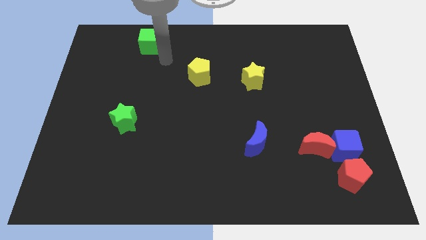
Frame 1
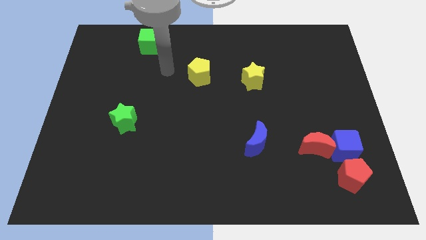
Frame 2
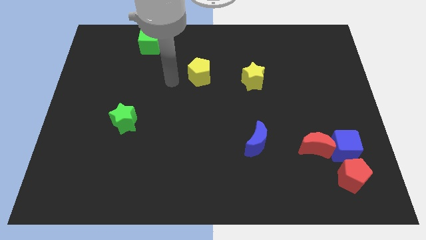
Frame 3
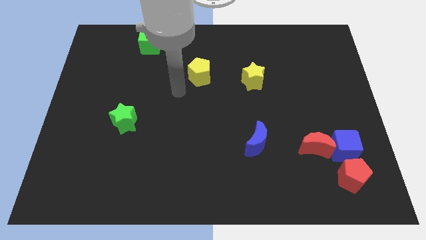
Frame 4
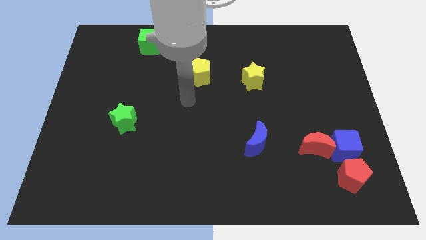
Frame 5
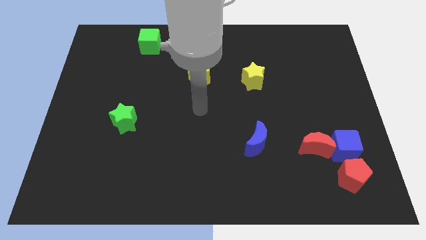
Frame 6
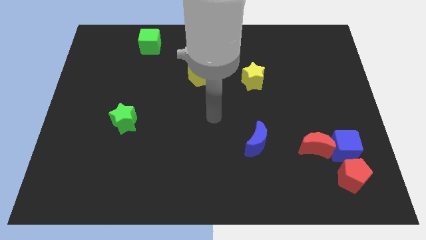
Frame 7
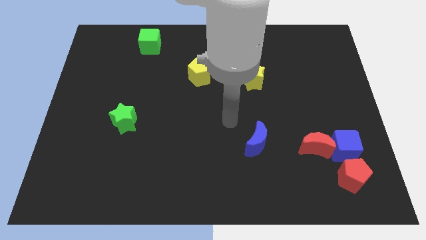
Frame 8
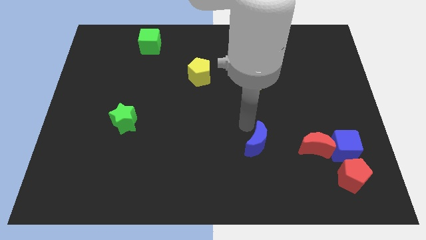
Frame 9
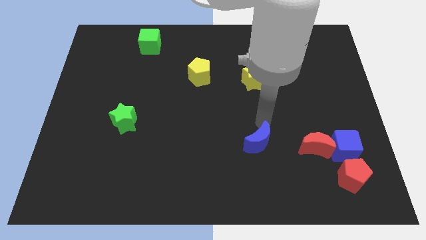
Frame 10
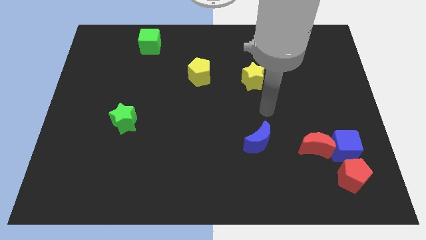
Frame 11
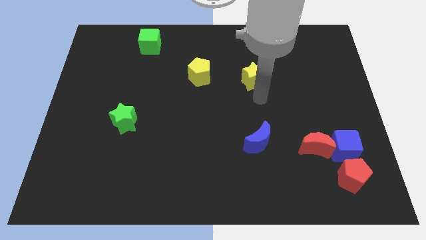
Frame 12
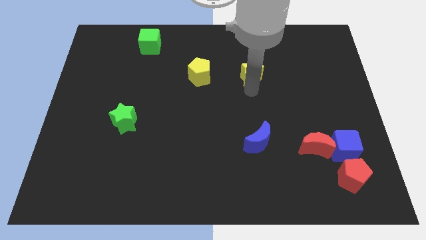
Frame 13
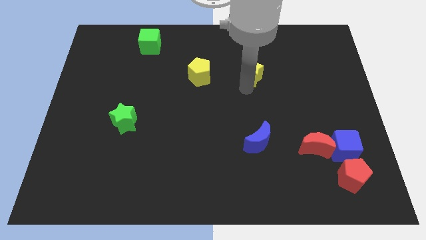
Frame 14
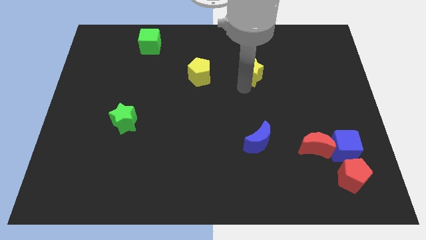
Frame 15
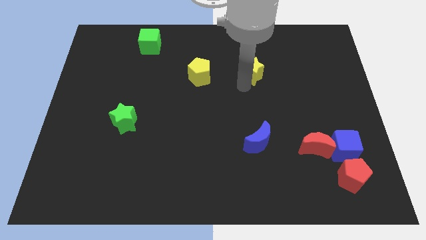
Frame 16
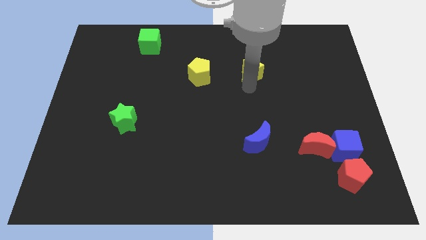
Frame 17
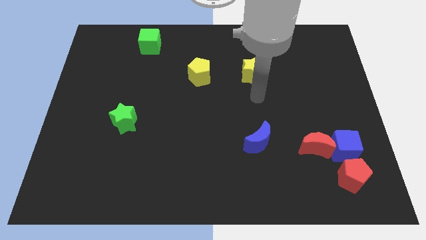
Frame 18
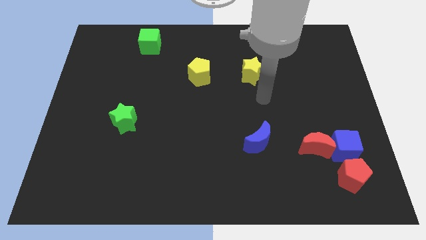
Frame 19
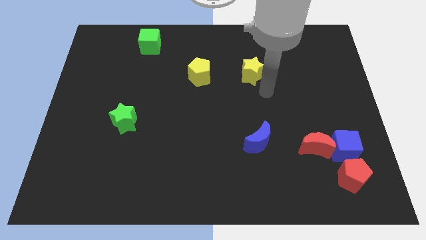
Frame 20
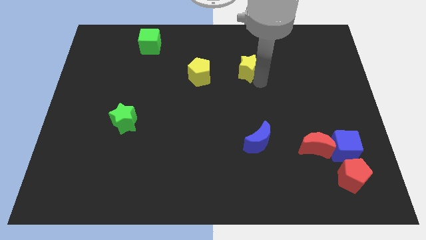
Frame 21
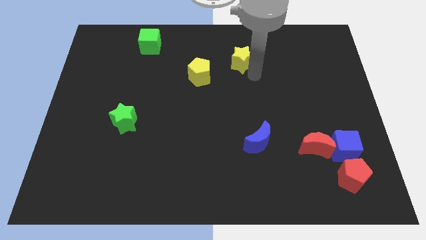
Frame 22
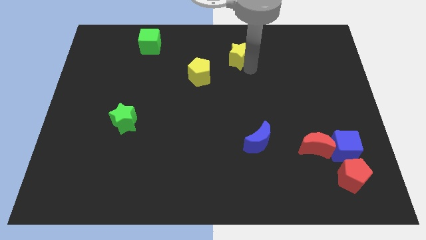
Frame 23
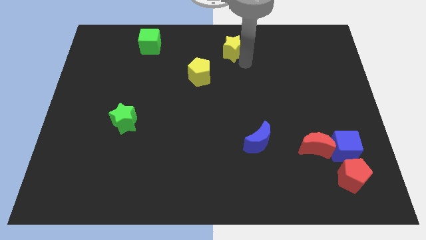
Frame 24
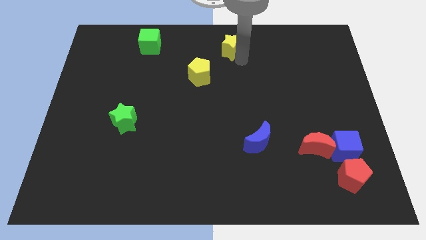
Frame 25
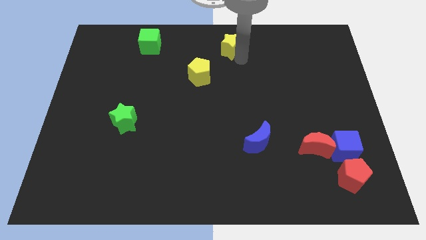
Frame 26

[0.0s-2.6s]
place the yellow star diagonal to the yellow pentagon

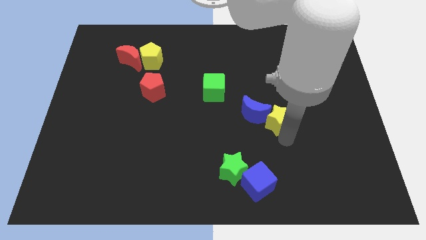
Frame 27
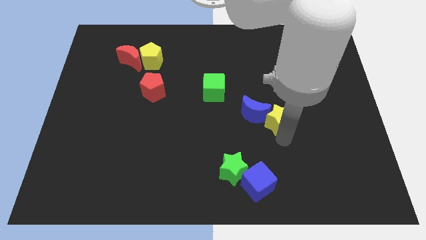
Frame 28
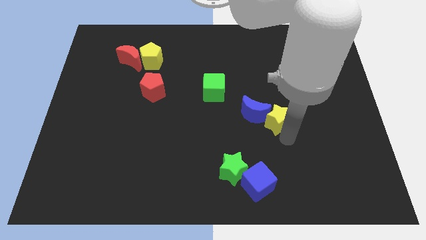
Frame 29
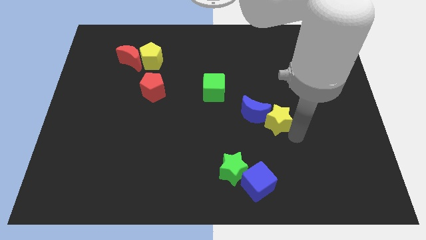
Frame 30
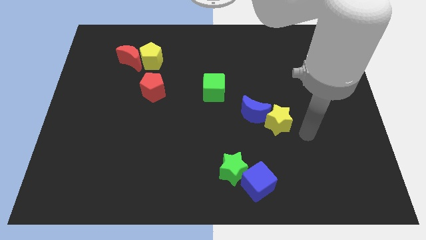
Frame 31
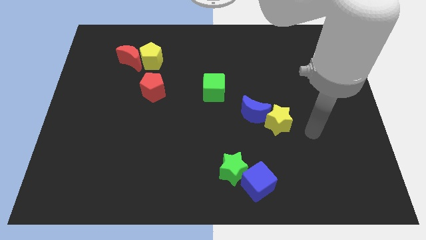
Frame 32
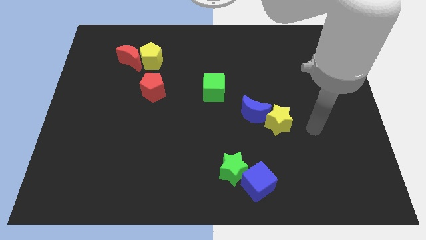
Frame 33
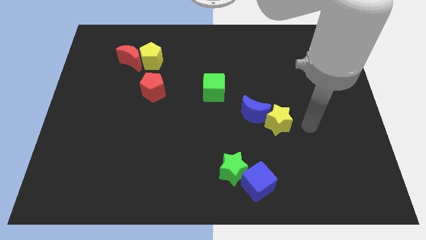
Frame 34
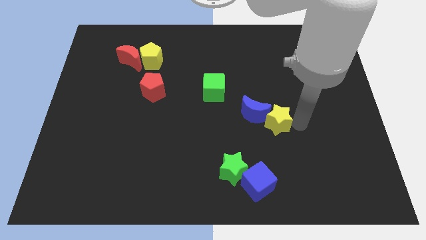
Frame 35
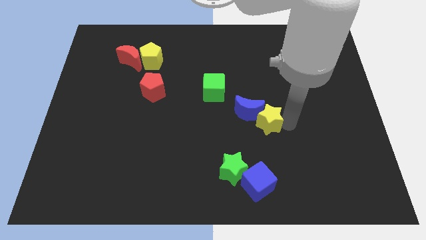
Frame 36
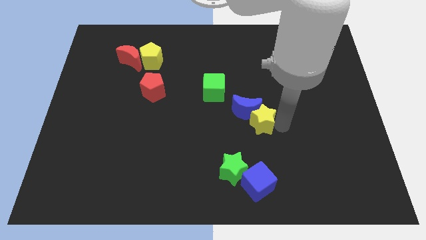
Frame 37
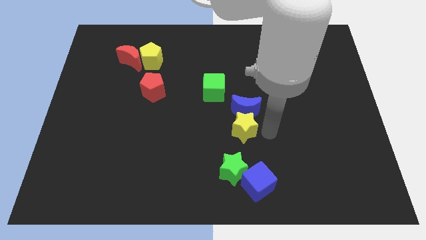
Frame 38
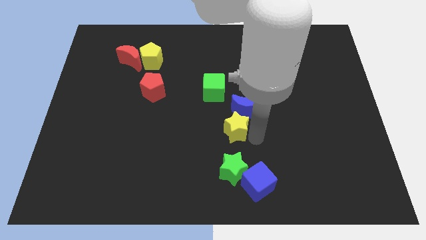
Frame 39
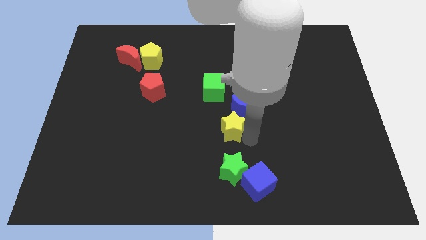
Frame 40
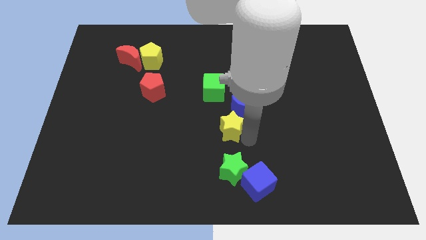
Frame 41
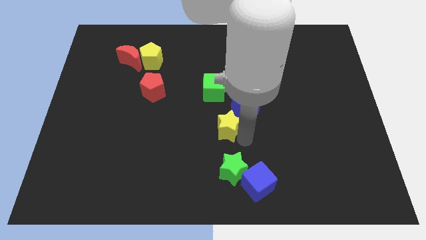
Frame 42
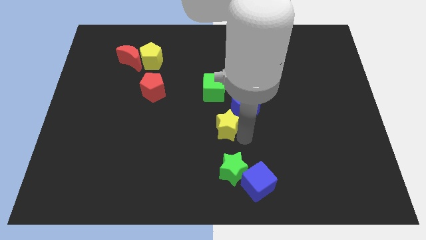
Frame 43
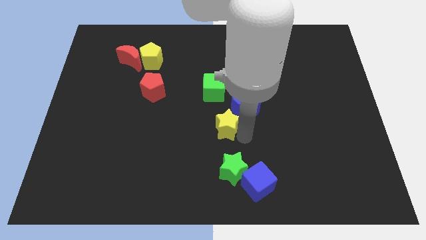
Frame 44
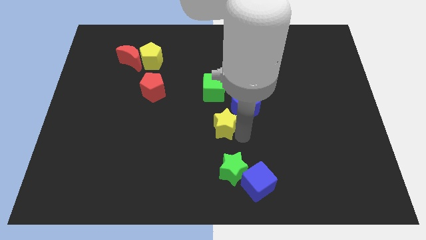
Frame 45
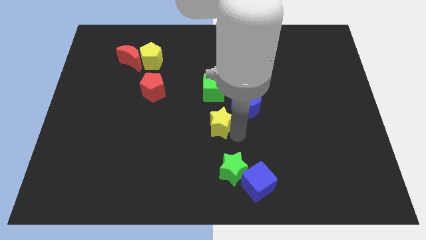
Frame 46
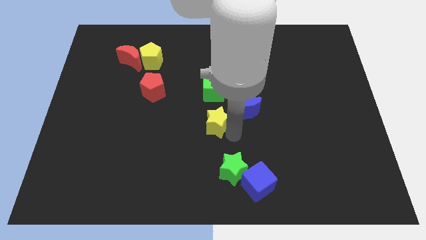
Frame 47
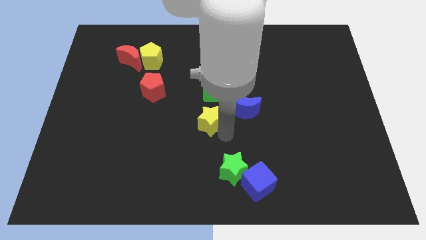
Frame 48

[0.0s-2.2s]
place the yellow star under the green cube

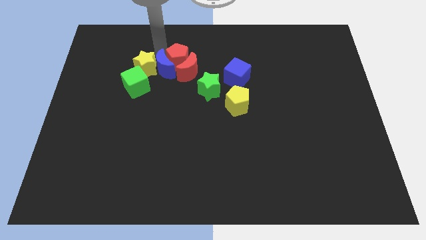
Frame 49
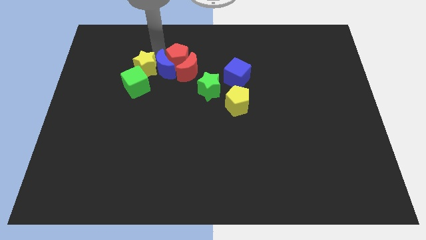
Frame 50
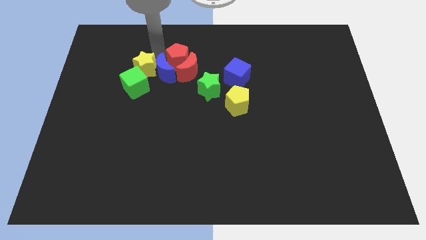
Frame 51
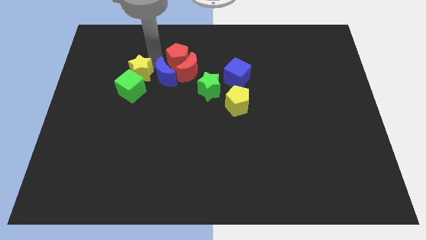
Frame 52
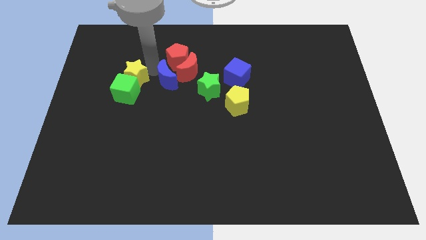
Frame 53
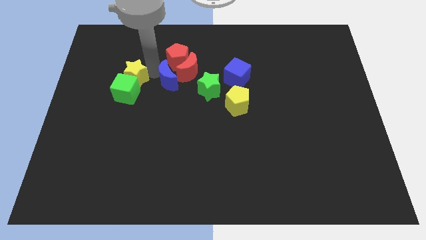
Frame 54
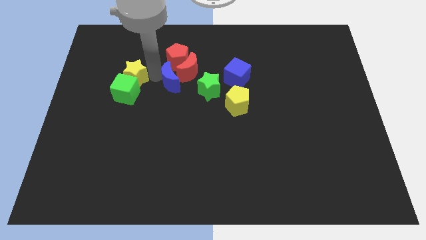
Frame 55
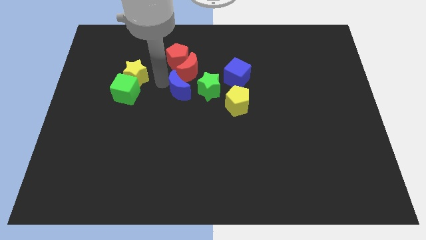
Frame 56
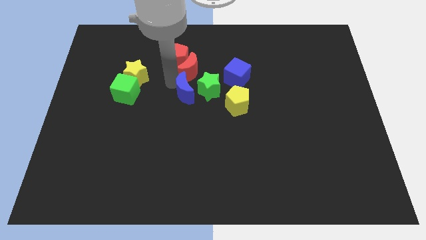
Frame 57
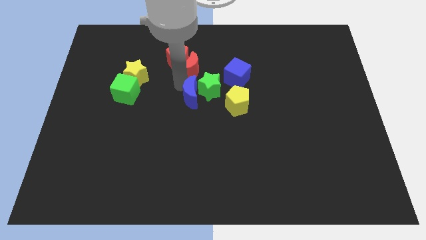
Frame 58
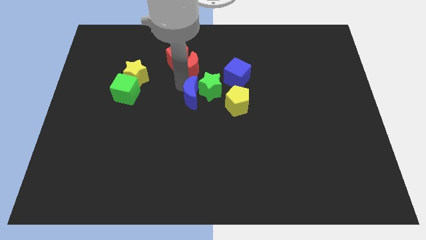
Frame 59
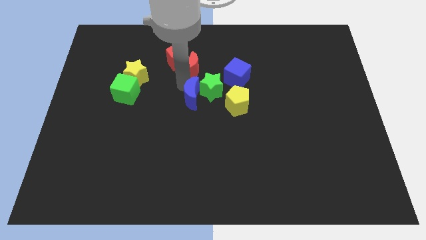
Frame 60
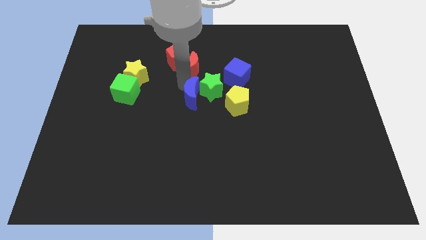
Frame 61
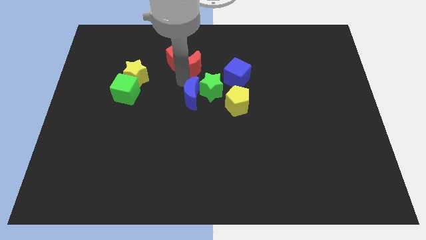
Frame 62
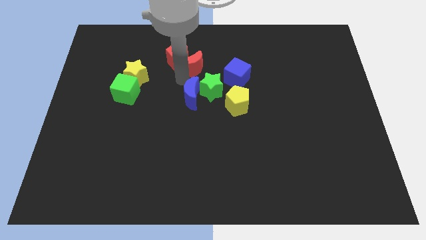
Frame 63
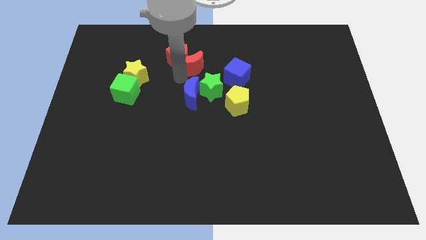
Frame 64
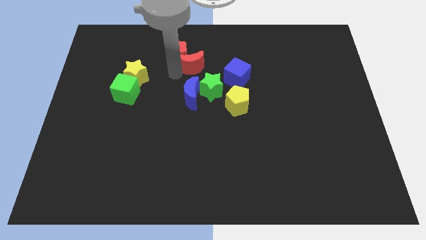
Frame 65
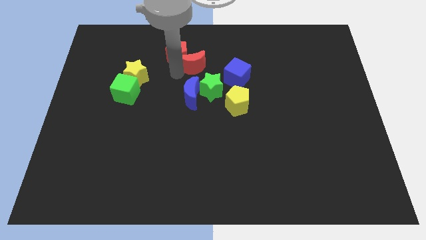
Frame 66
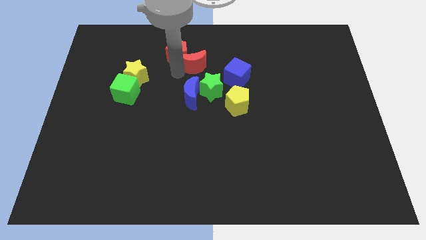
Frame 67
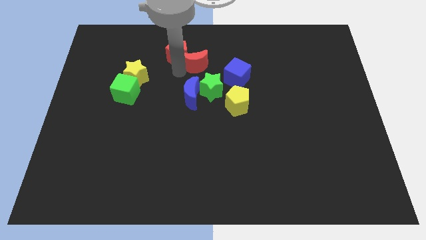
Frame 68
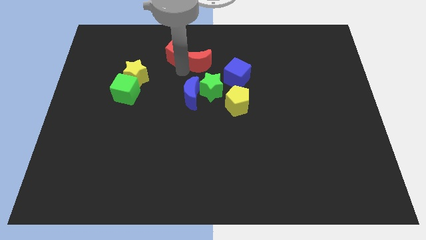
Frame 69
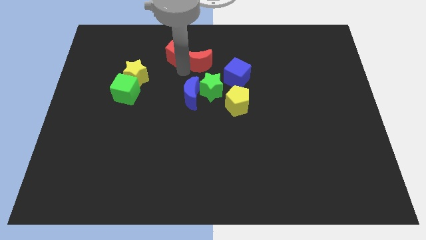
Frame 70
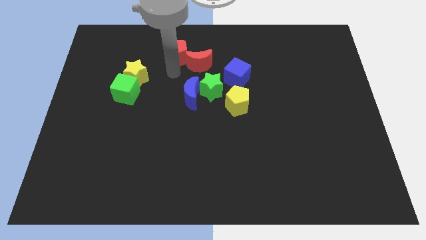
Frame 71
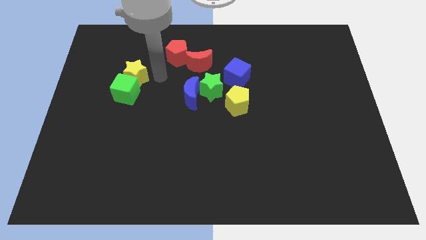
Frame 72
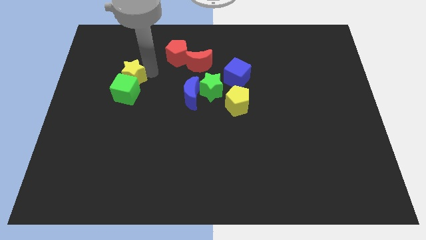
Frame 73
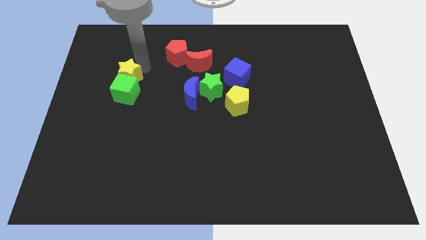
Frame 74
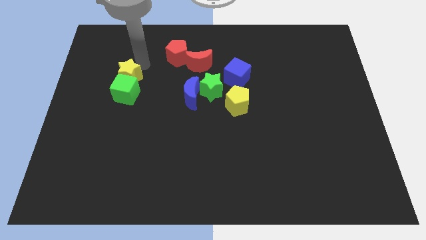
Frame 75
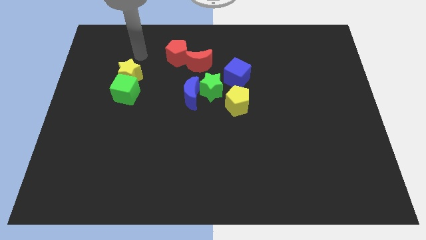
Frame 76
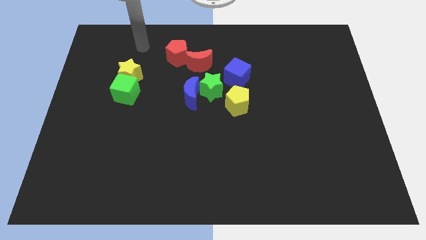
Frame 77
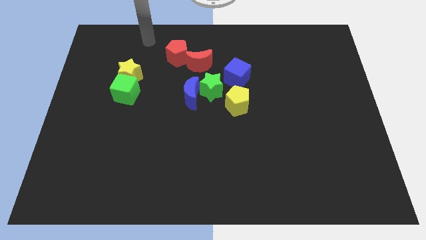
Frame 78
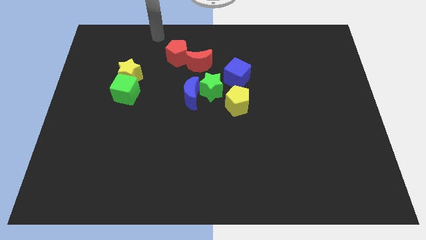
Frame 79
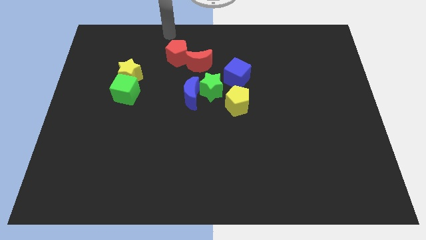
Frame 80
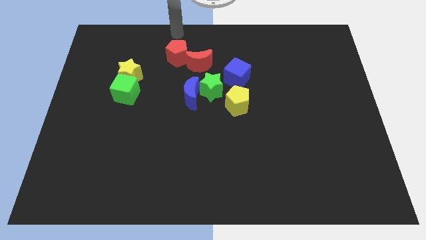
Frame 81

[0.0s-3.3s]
push the blue moon to the green star

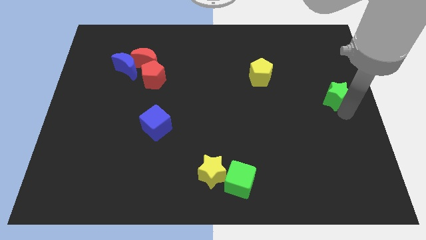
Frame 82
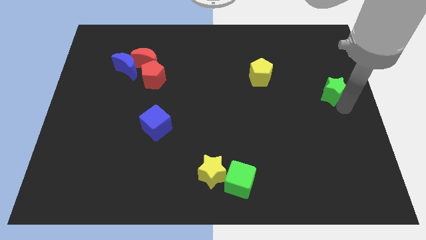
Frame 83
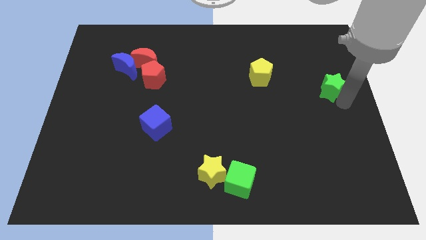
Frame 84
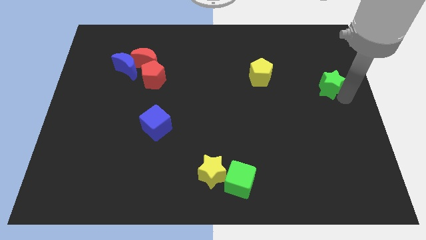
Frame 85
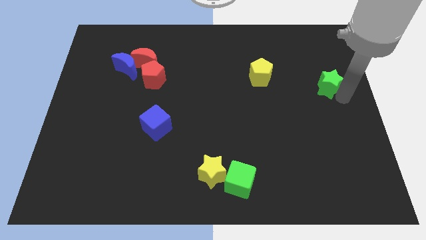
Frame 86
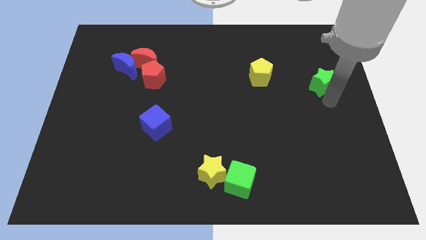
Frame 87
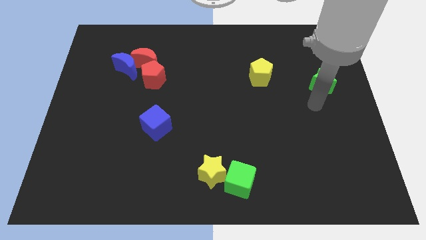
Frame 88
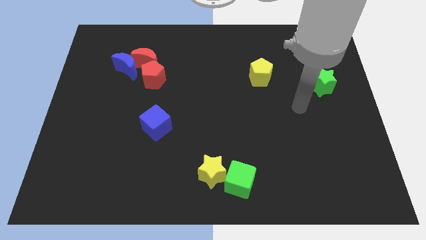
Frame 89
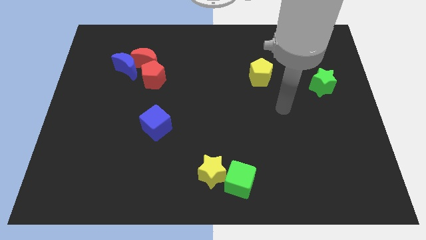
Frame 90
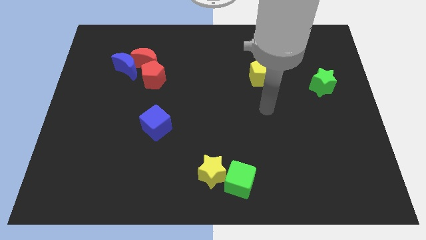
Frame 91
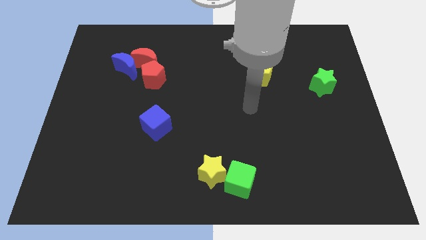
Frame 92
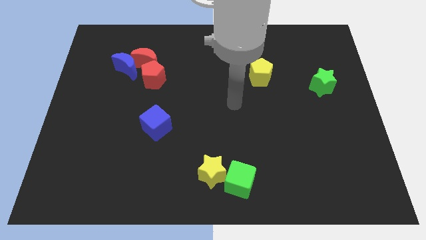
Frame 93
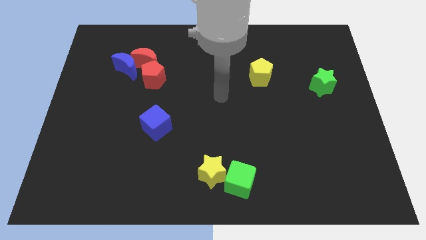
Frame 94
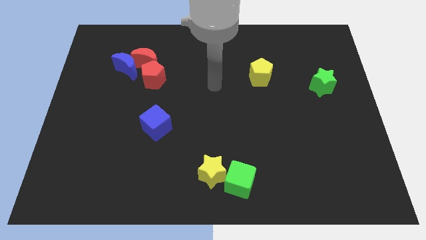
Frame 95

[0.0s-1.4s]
place green star opposite to yellow pentagon
